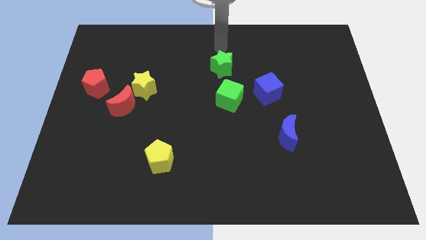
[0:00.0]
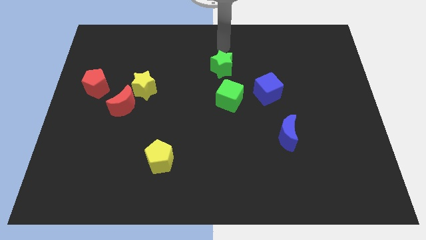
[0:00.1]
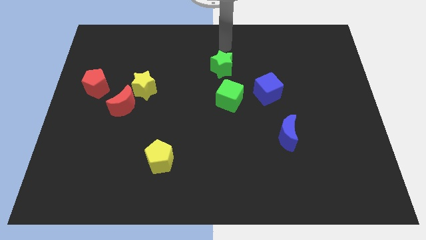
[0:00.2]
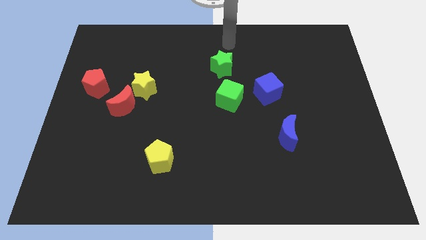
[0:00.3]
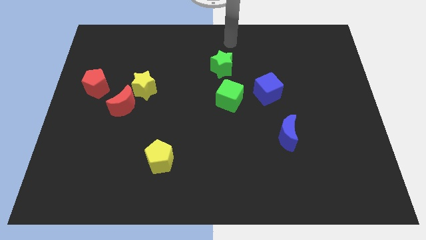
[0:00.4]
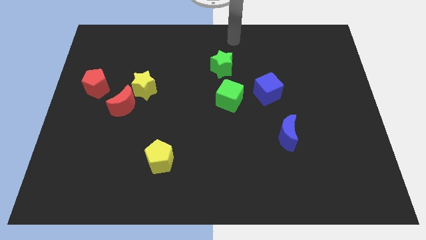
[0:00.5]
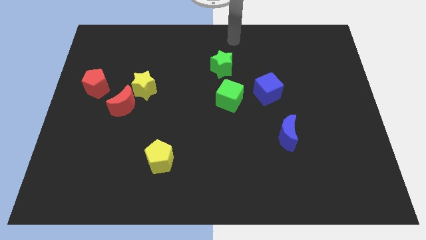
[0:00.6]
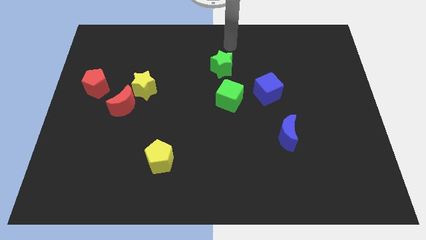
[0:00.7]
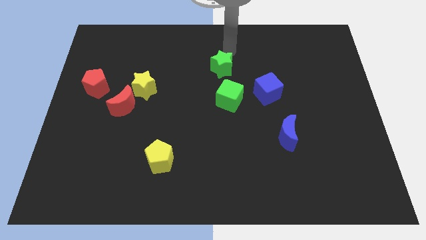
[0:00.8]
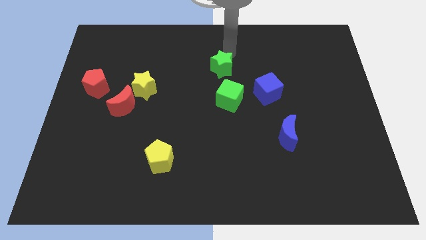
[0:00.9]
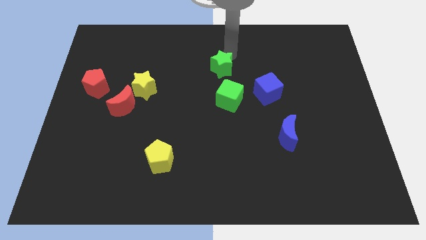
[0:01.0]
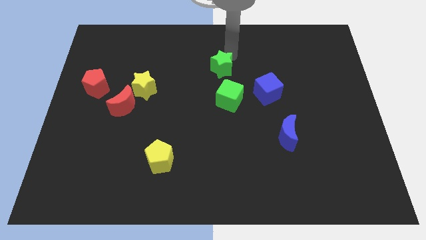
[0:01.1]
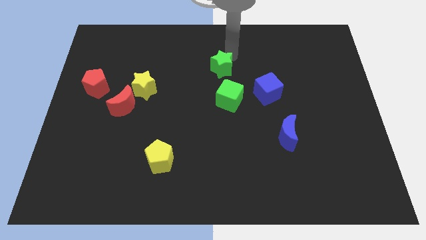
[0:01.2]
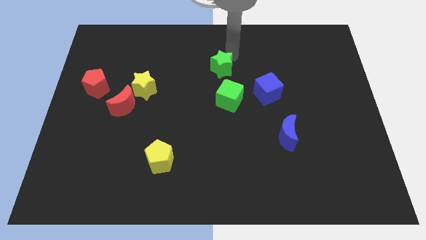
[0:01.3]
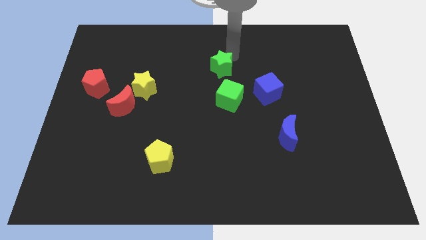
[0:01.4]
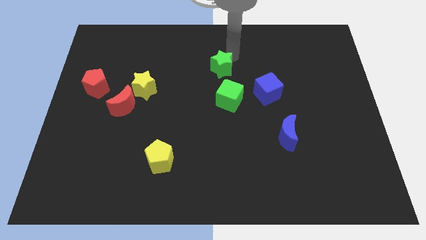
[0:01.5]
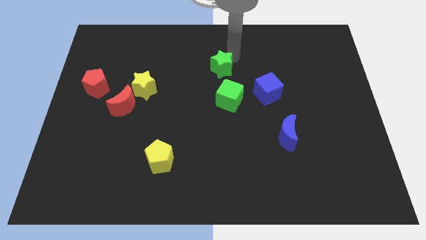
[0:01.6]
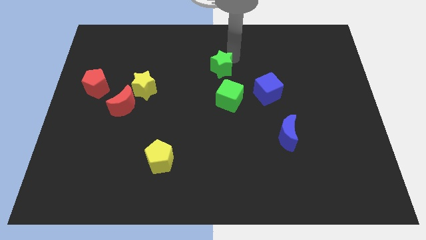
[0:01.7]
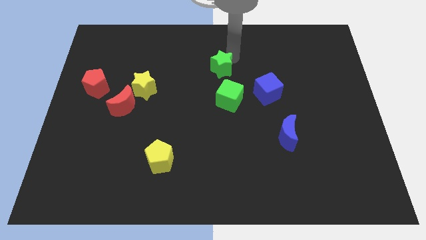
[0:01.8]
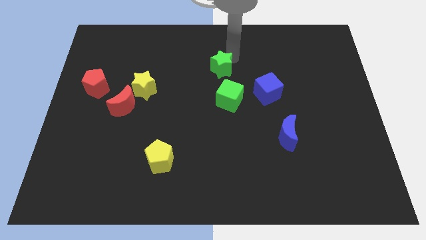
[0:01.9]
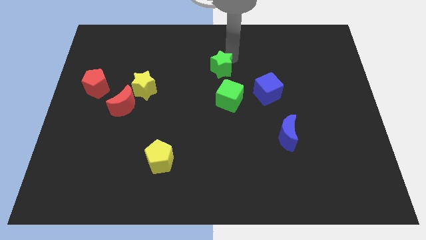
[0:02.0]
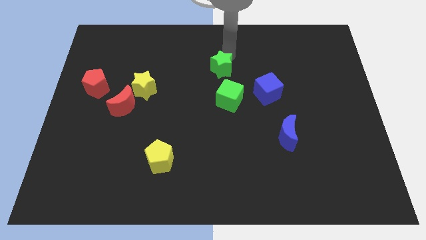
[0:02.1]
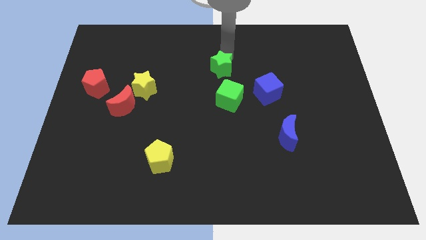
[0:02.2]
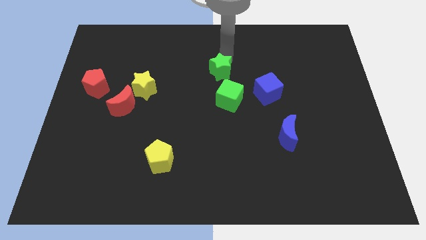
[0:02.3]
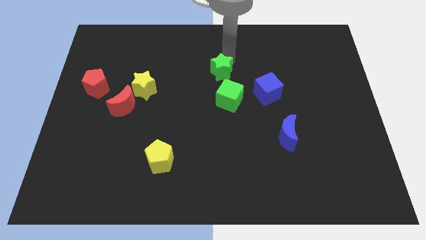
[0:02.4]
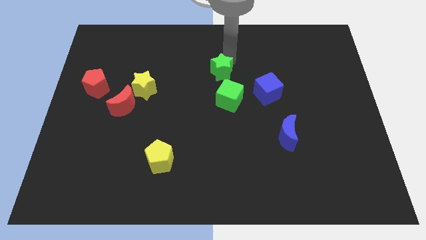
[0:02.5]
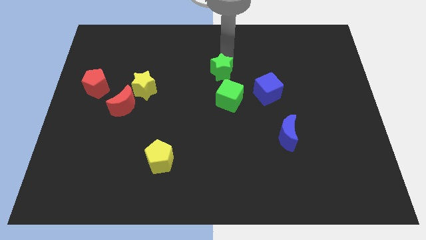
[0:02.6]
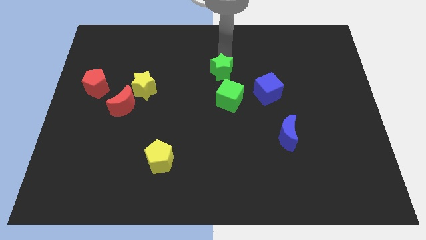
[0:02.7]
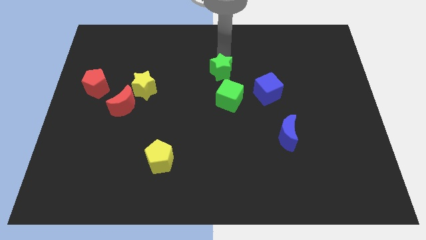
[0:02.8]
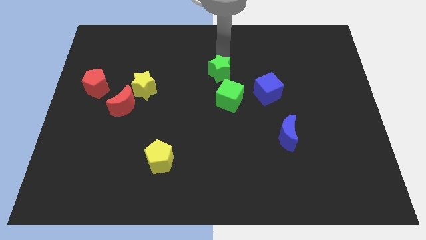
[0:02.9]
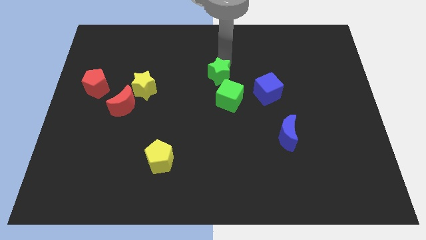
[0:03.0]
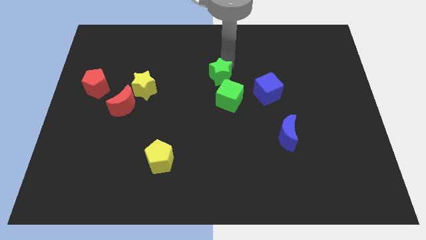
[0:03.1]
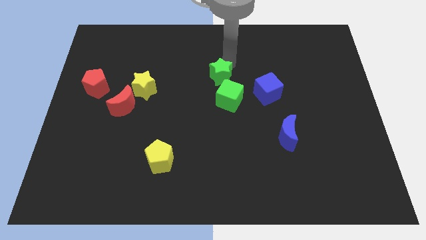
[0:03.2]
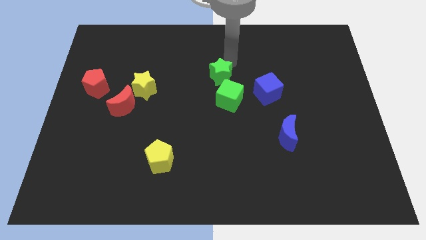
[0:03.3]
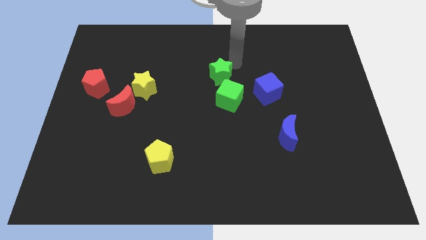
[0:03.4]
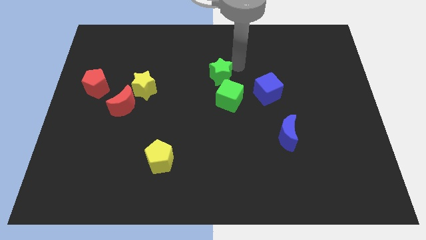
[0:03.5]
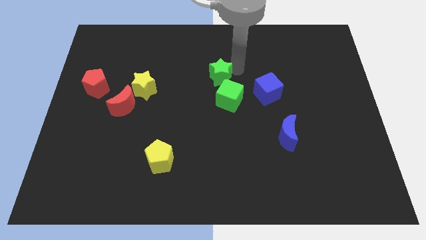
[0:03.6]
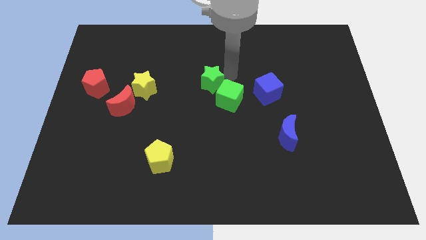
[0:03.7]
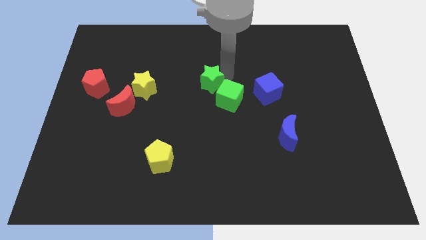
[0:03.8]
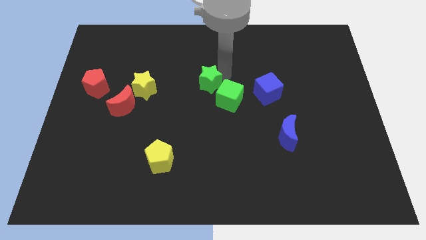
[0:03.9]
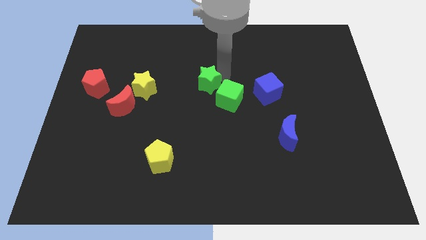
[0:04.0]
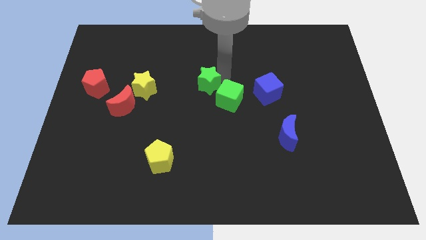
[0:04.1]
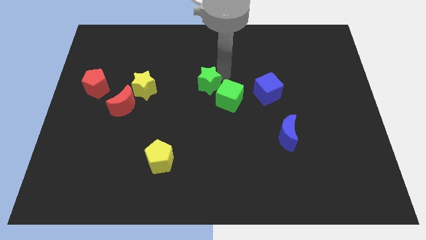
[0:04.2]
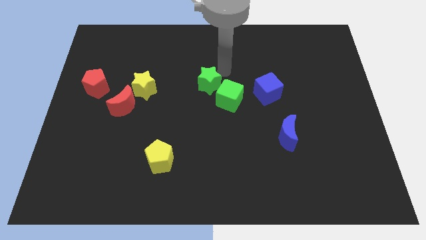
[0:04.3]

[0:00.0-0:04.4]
place green star to the left of green cube

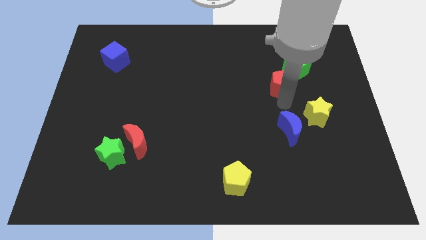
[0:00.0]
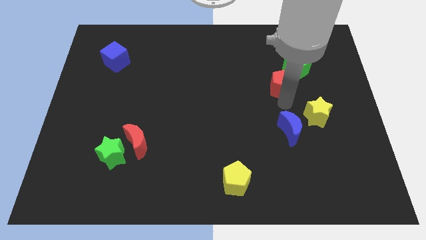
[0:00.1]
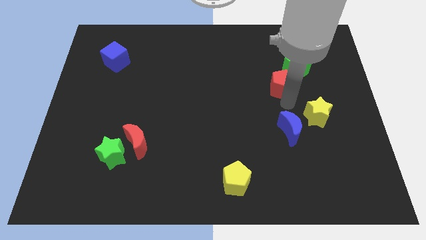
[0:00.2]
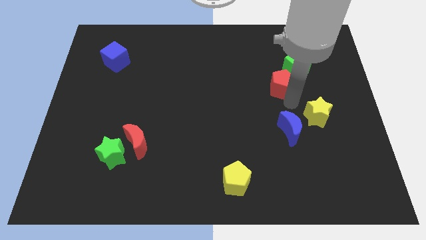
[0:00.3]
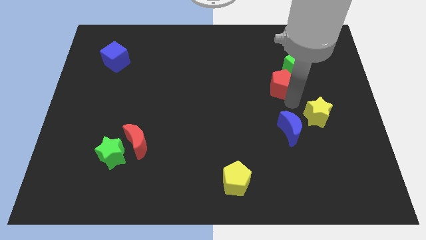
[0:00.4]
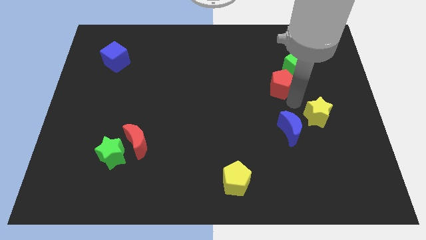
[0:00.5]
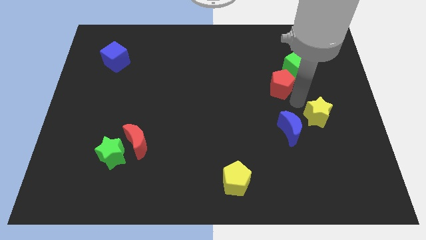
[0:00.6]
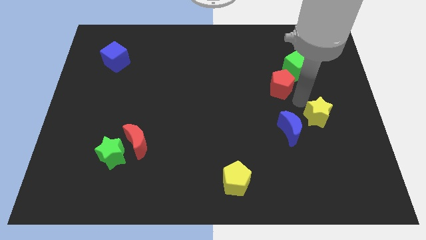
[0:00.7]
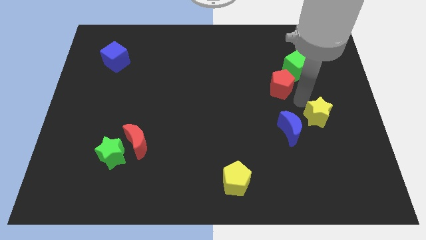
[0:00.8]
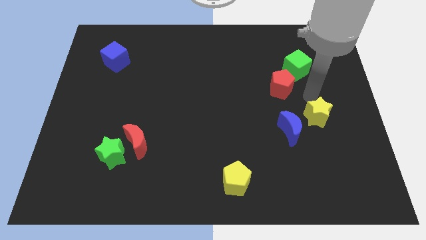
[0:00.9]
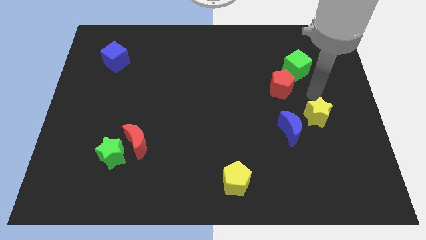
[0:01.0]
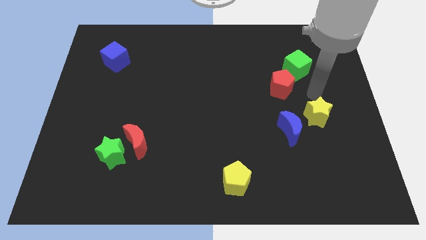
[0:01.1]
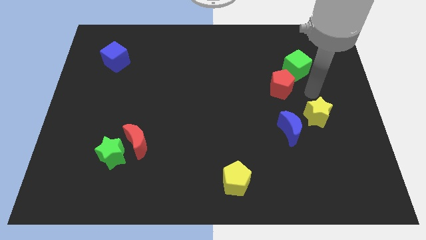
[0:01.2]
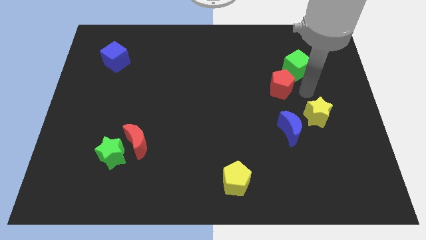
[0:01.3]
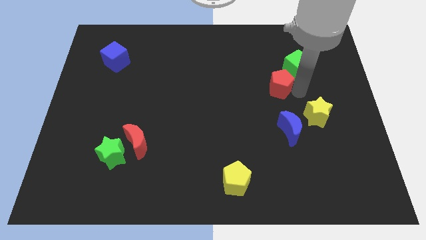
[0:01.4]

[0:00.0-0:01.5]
move your hand to the right of the red pentagon

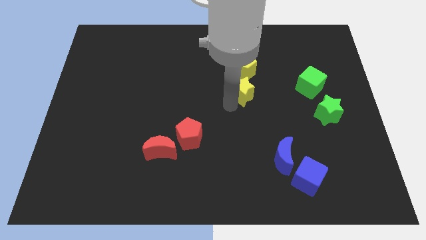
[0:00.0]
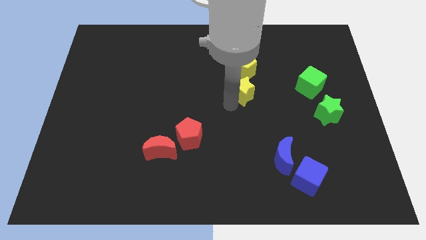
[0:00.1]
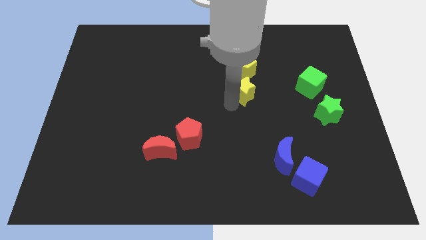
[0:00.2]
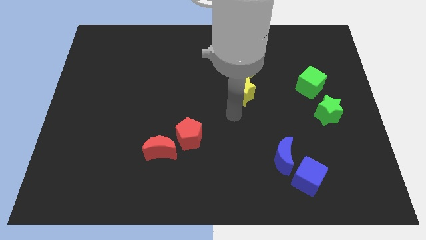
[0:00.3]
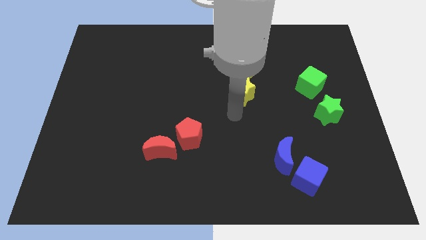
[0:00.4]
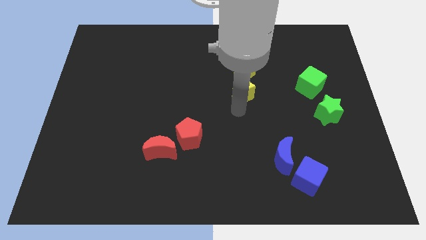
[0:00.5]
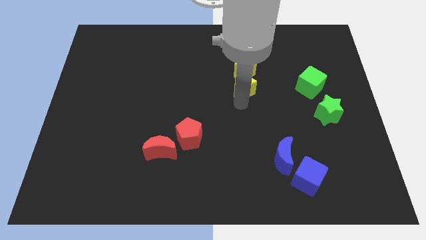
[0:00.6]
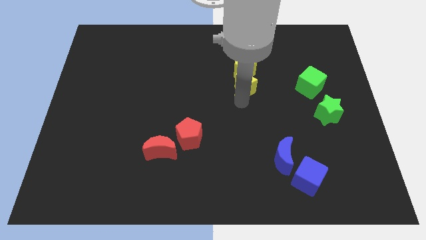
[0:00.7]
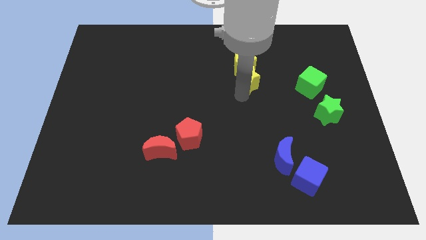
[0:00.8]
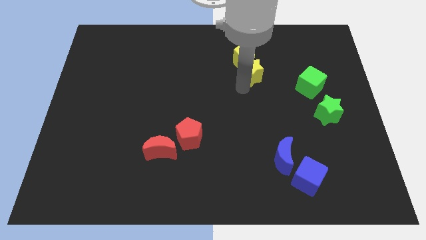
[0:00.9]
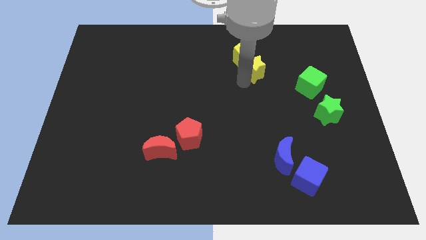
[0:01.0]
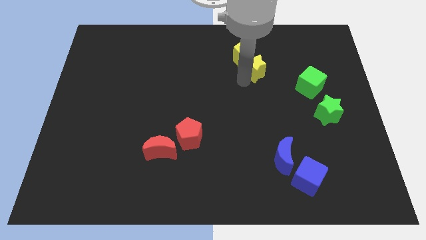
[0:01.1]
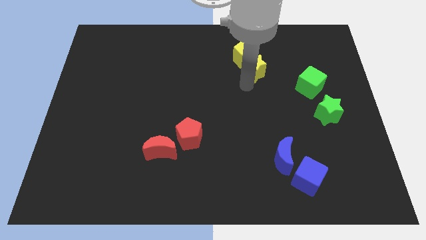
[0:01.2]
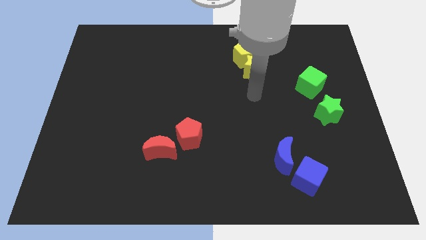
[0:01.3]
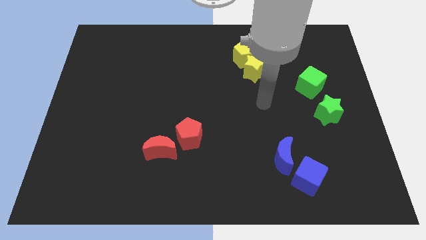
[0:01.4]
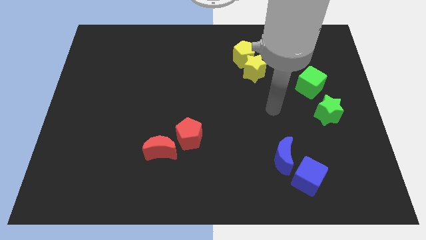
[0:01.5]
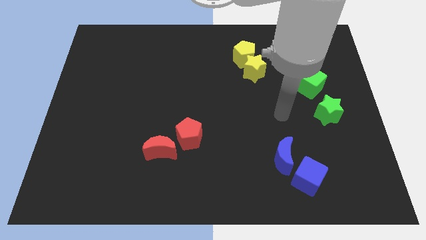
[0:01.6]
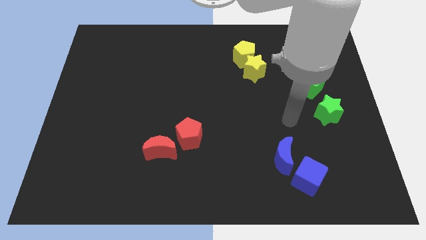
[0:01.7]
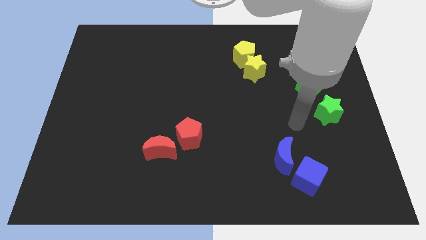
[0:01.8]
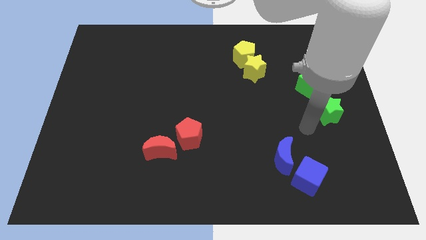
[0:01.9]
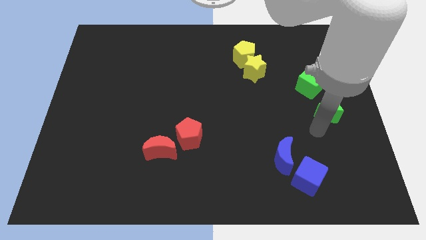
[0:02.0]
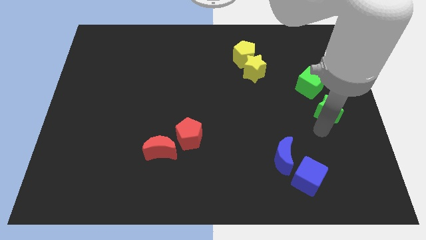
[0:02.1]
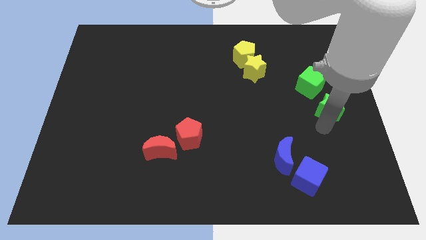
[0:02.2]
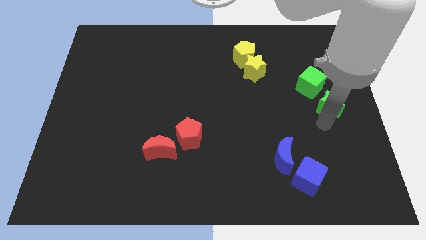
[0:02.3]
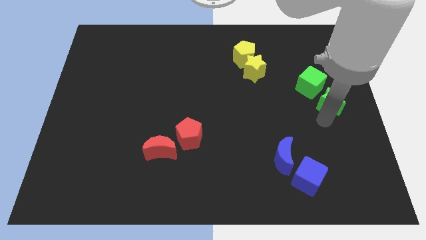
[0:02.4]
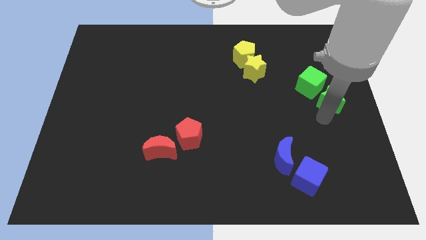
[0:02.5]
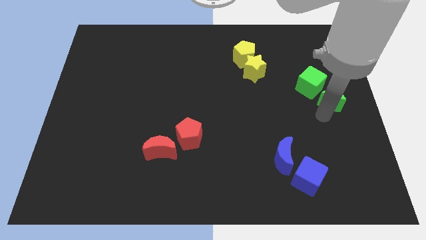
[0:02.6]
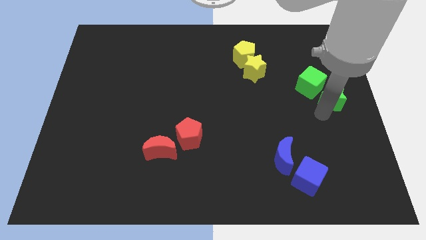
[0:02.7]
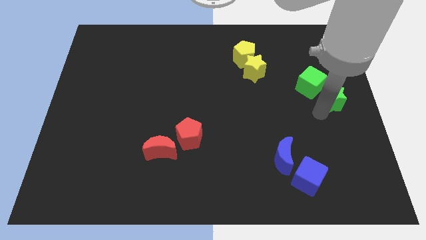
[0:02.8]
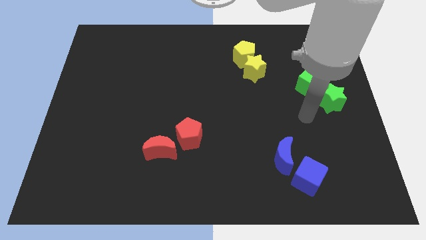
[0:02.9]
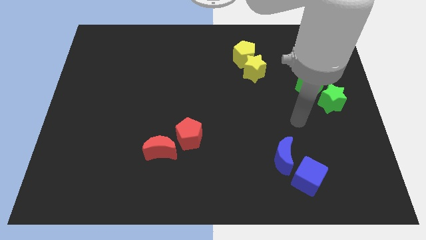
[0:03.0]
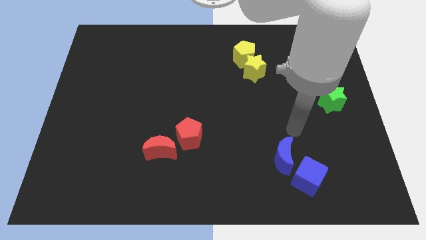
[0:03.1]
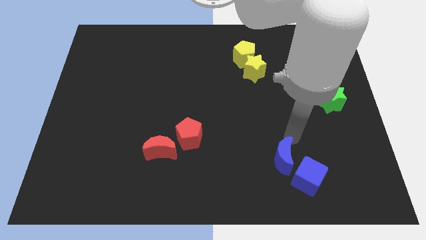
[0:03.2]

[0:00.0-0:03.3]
push the yellow star into the yellow pentagon
